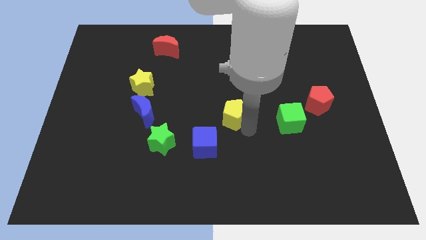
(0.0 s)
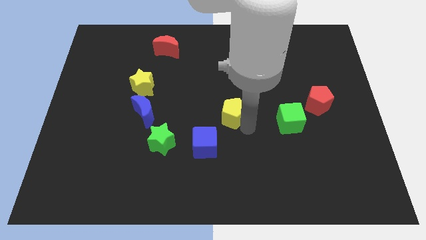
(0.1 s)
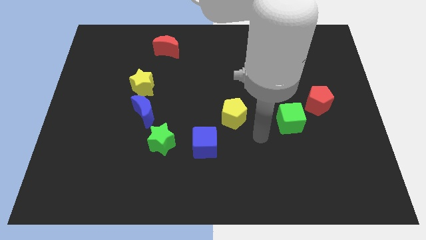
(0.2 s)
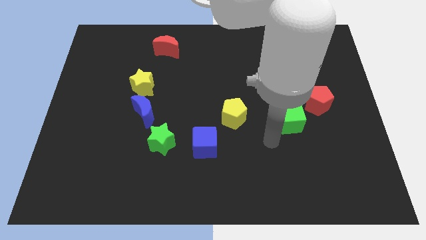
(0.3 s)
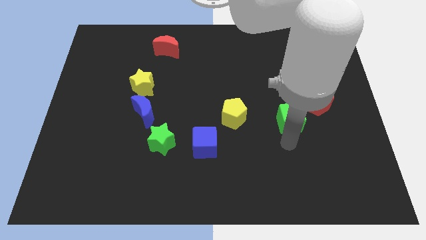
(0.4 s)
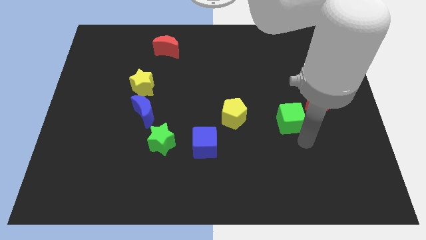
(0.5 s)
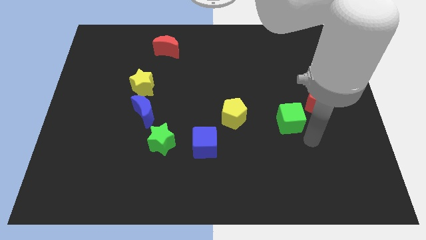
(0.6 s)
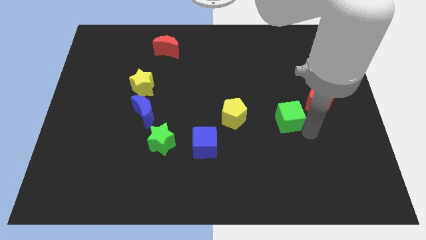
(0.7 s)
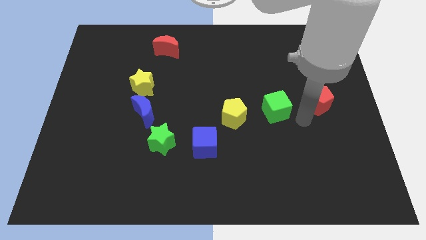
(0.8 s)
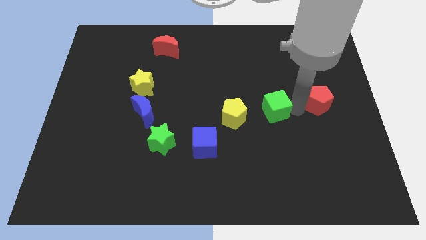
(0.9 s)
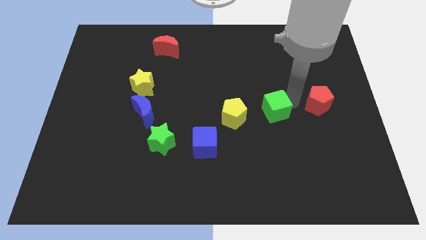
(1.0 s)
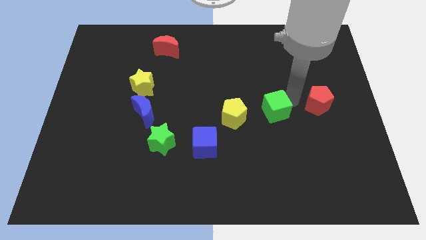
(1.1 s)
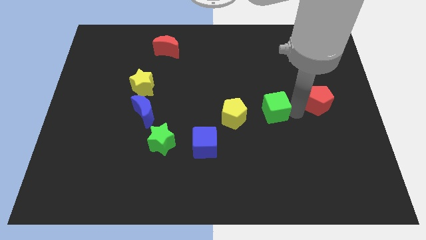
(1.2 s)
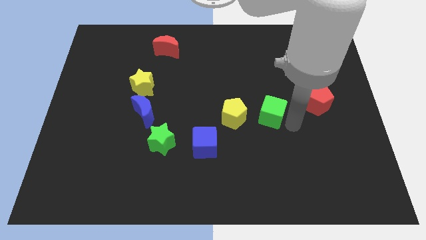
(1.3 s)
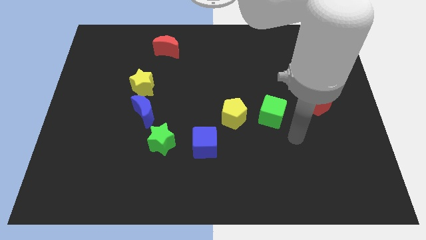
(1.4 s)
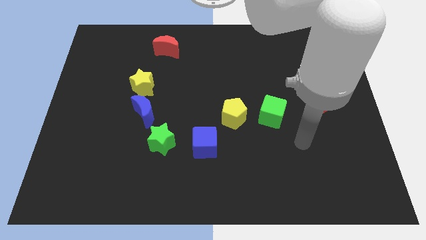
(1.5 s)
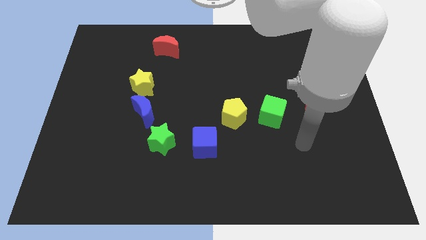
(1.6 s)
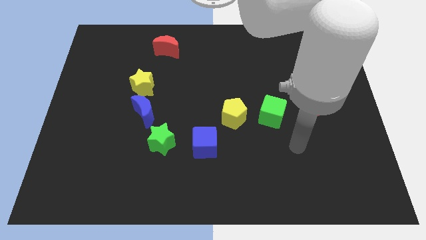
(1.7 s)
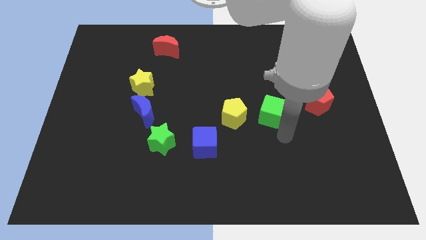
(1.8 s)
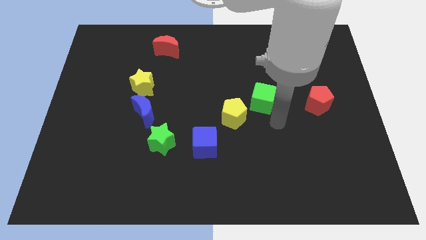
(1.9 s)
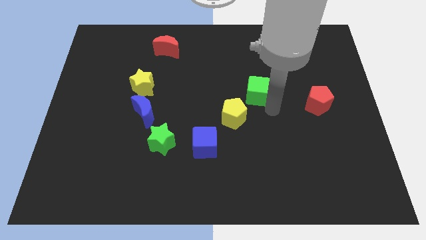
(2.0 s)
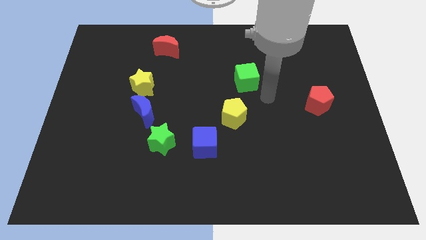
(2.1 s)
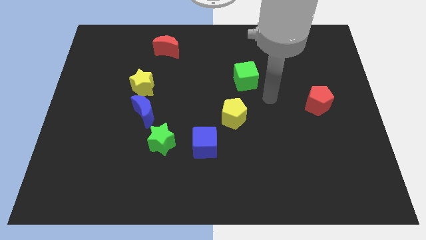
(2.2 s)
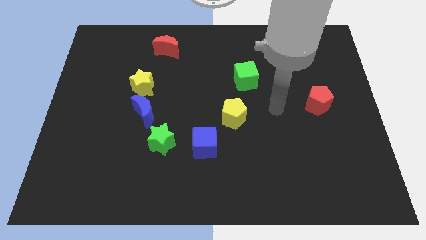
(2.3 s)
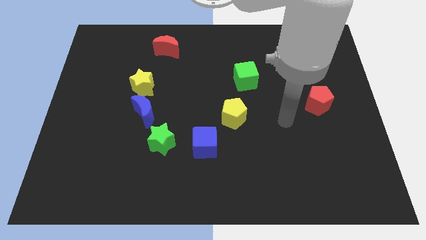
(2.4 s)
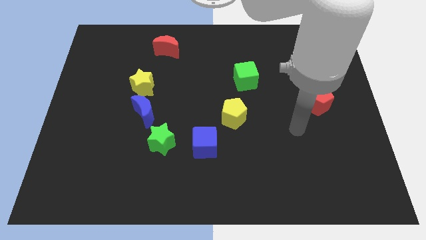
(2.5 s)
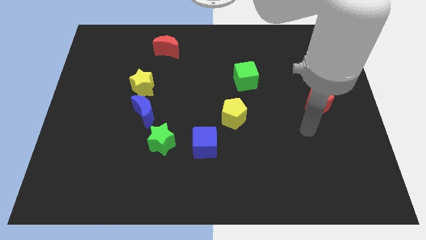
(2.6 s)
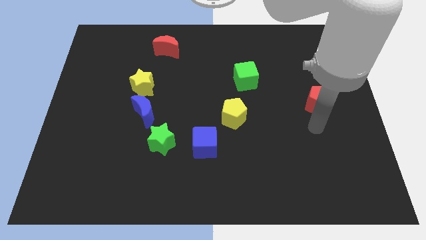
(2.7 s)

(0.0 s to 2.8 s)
move the green cube to the top of the yellow pentagon

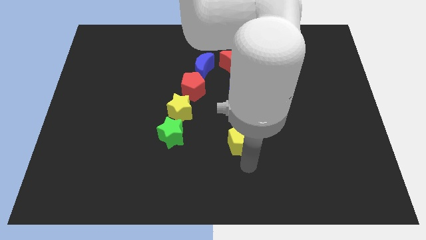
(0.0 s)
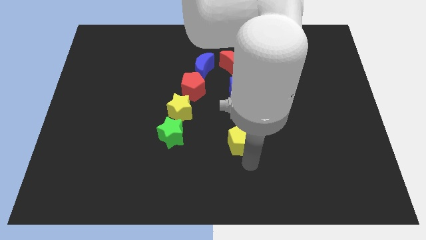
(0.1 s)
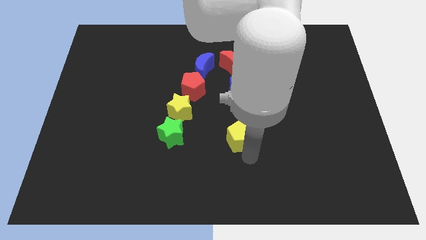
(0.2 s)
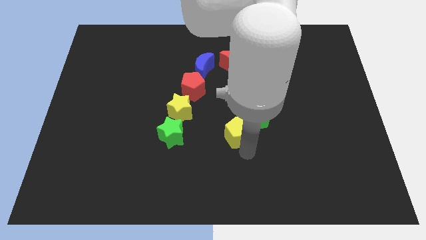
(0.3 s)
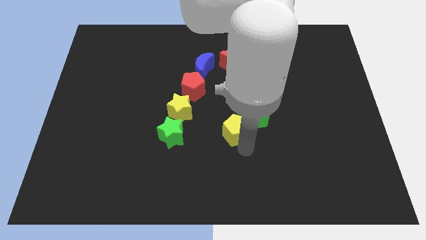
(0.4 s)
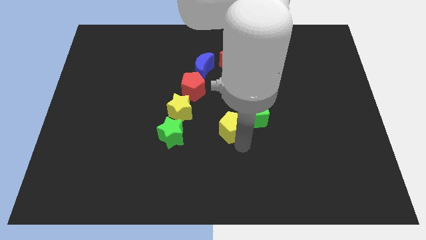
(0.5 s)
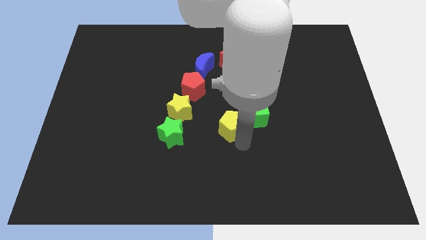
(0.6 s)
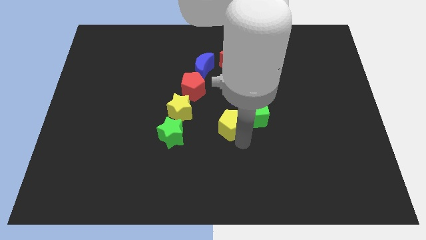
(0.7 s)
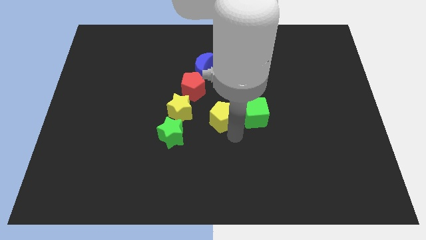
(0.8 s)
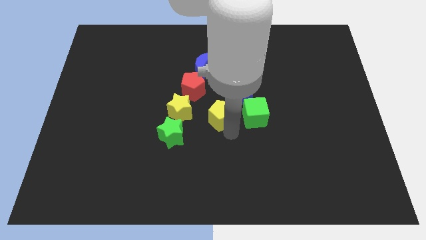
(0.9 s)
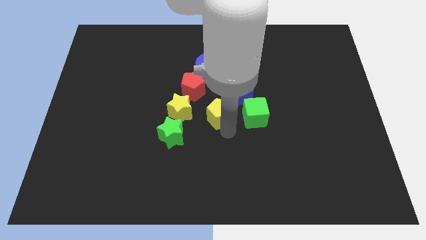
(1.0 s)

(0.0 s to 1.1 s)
put the yellow pentagon at the left side of the green cube

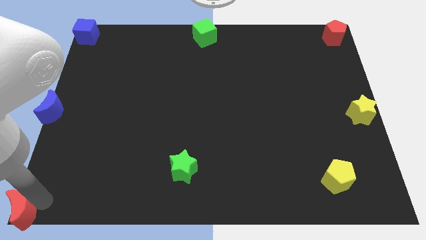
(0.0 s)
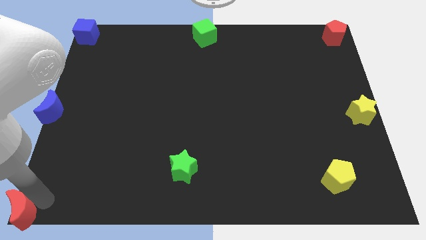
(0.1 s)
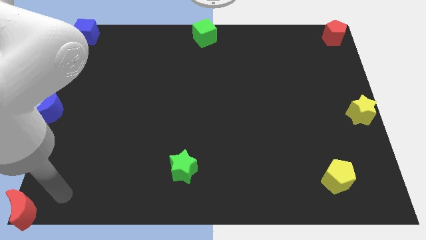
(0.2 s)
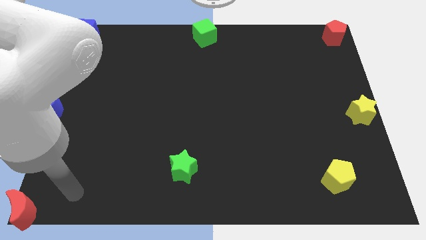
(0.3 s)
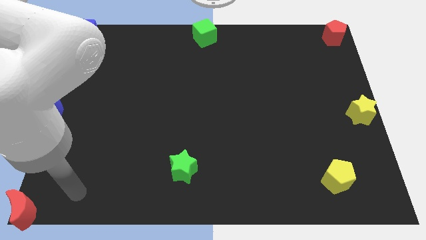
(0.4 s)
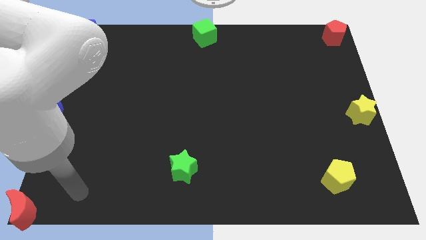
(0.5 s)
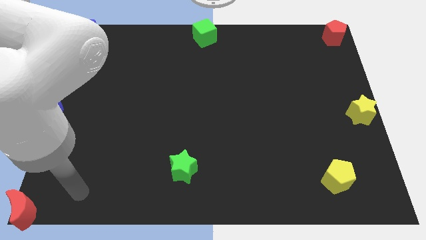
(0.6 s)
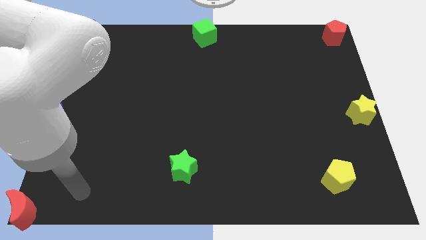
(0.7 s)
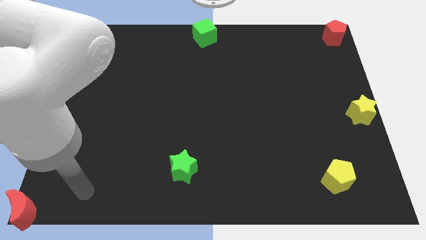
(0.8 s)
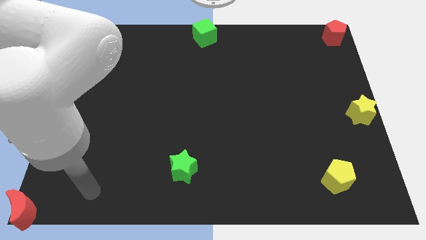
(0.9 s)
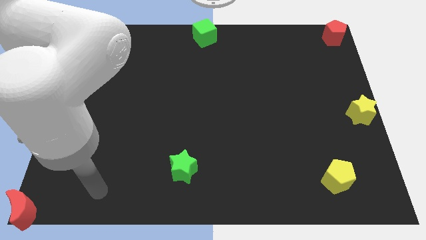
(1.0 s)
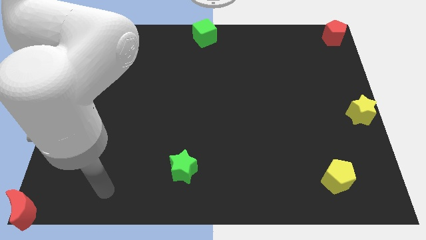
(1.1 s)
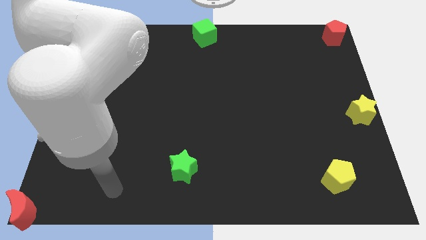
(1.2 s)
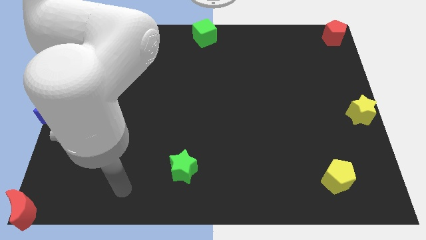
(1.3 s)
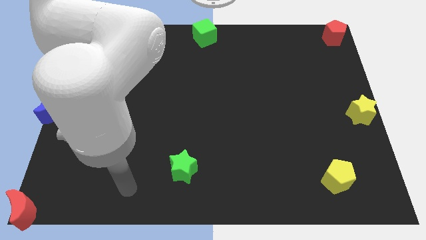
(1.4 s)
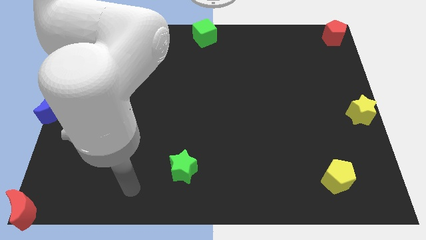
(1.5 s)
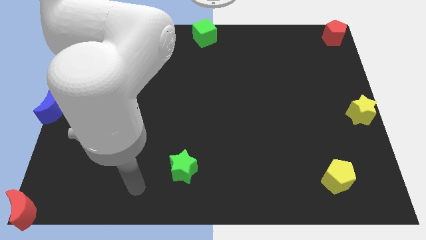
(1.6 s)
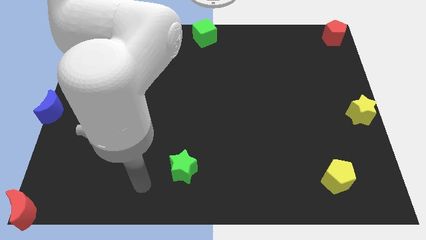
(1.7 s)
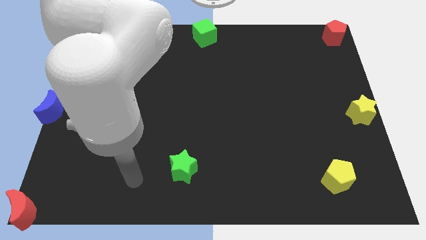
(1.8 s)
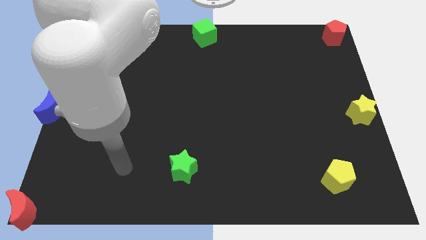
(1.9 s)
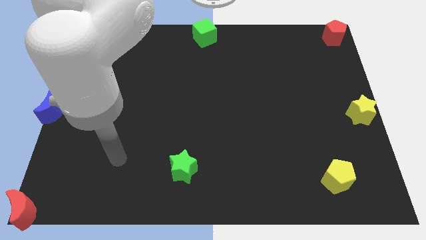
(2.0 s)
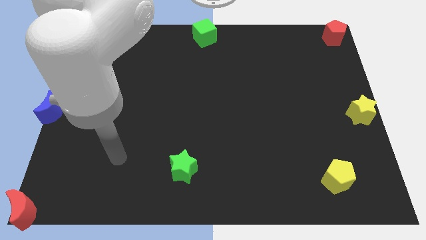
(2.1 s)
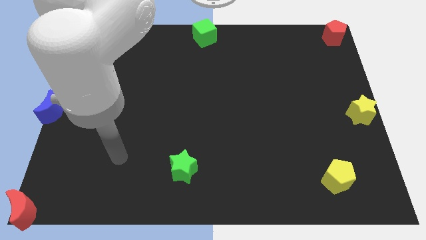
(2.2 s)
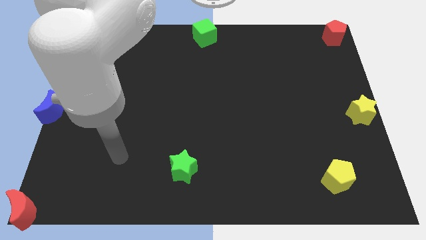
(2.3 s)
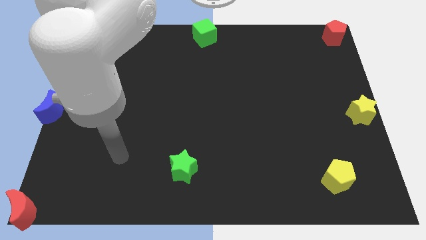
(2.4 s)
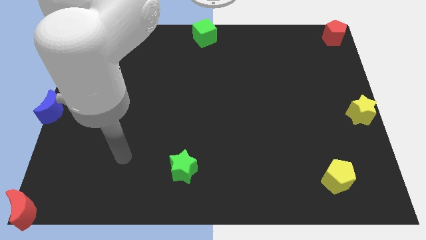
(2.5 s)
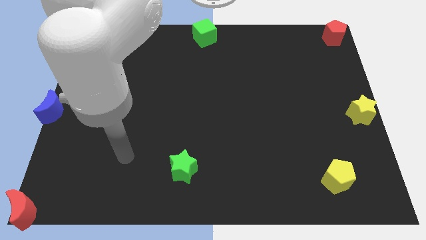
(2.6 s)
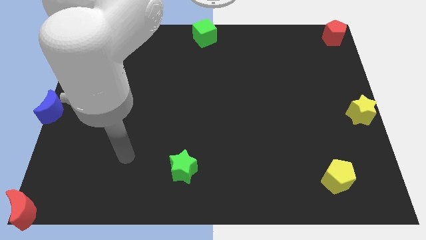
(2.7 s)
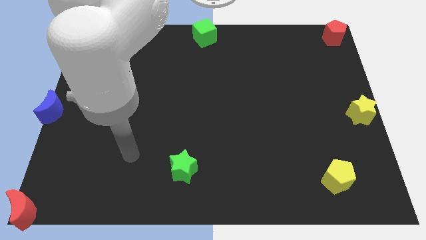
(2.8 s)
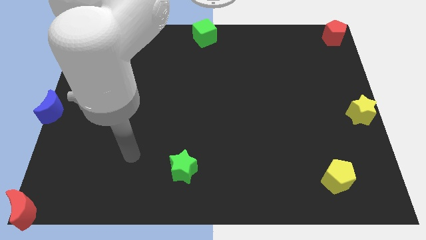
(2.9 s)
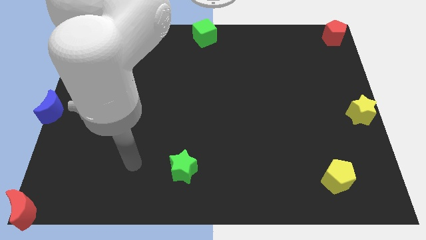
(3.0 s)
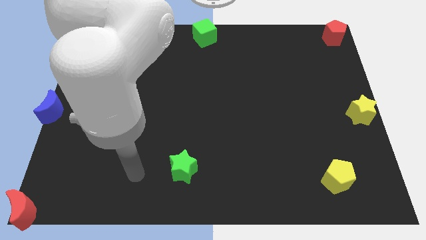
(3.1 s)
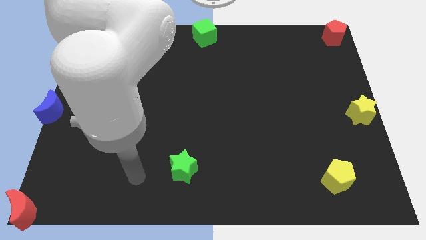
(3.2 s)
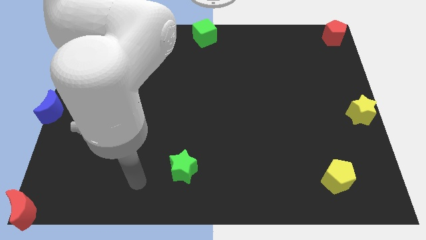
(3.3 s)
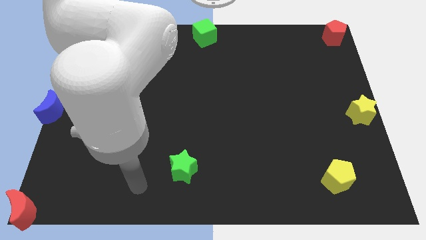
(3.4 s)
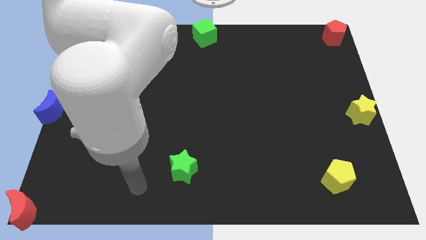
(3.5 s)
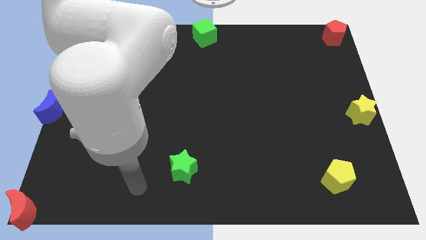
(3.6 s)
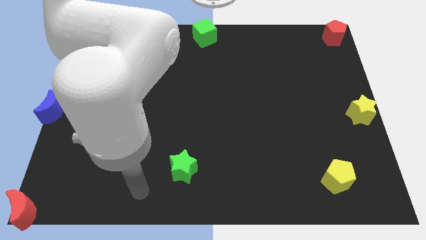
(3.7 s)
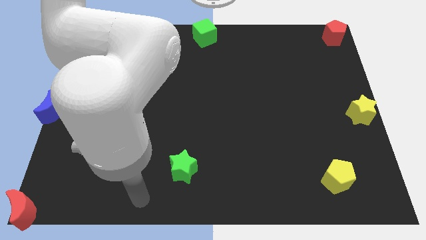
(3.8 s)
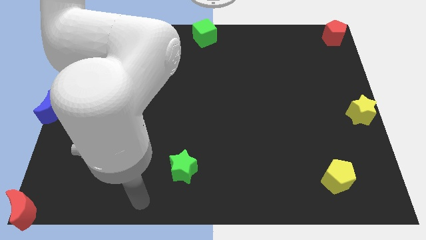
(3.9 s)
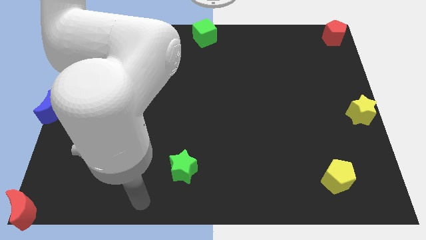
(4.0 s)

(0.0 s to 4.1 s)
move your arm away from red moon

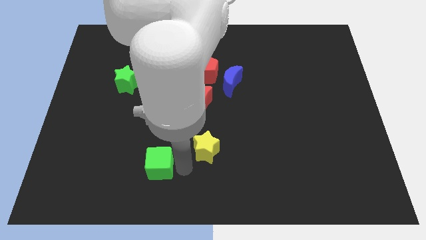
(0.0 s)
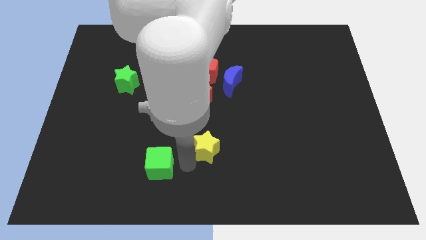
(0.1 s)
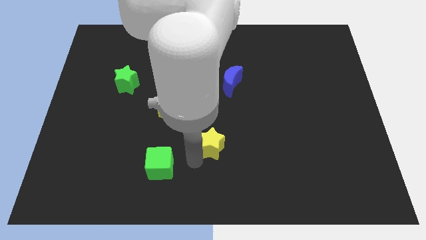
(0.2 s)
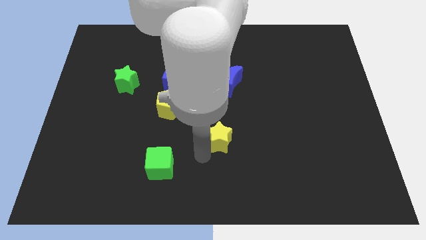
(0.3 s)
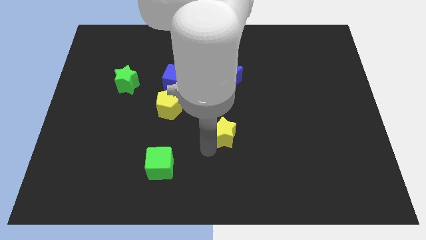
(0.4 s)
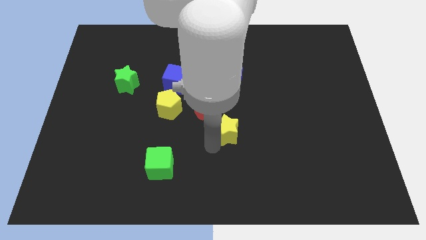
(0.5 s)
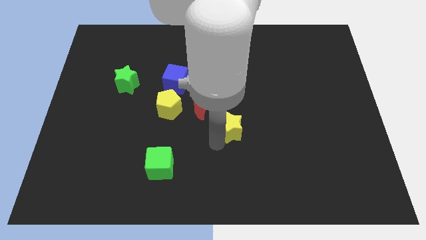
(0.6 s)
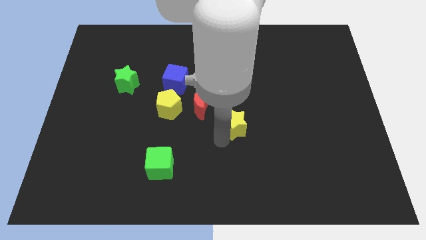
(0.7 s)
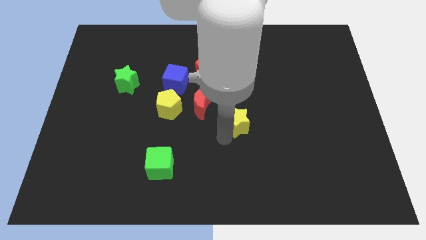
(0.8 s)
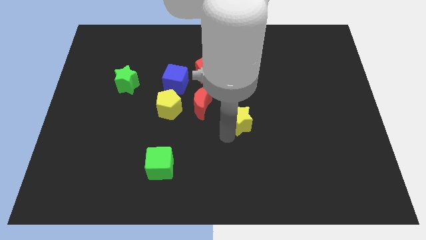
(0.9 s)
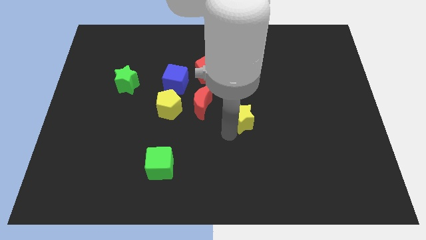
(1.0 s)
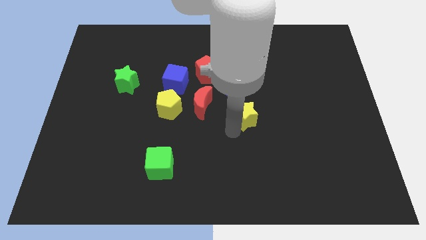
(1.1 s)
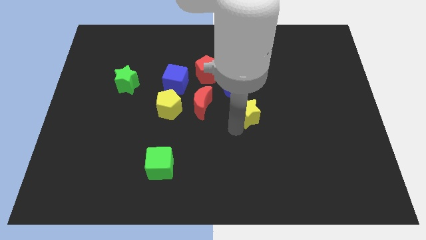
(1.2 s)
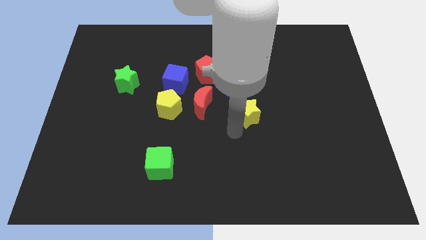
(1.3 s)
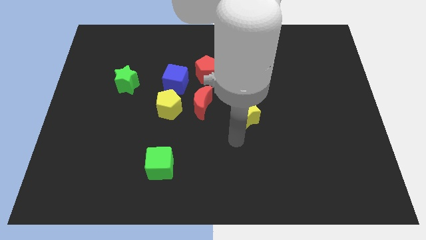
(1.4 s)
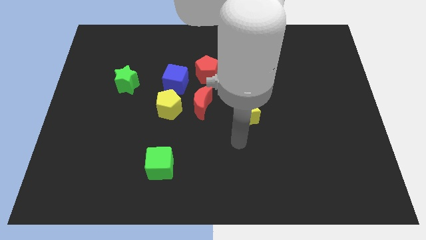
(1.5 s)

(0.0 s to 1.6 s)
place the yellow star vertically to bottom of the blue moon
